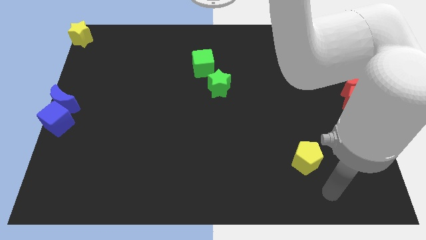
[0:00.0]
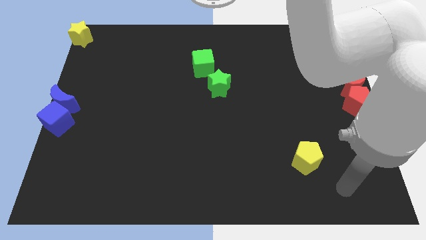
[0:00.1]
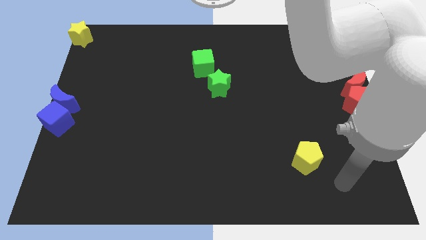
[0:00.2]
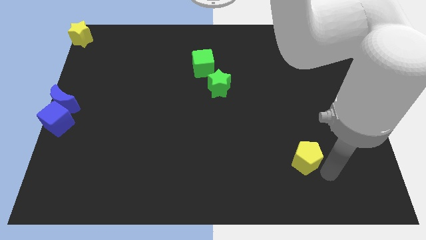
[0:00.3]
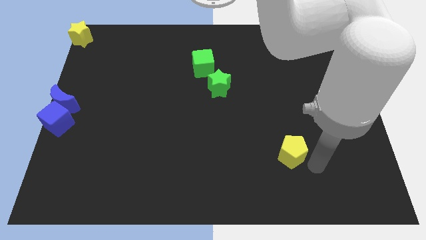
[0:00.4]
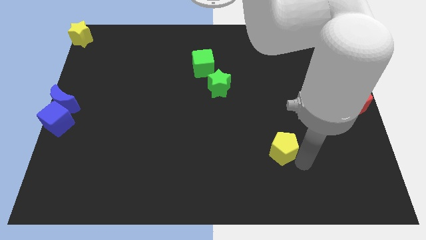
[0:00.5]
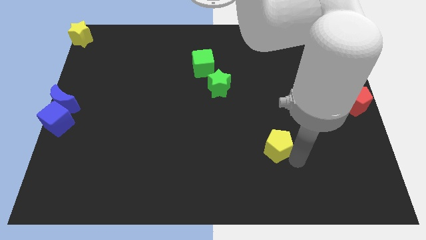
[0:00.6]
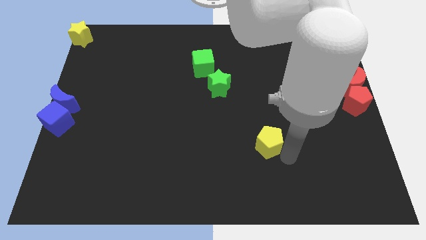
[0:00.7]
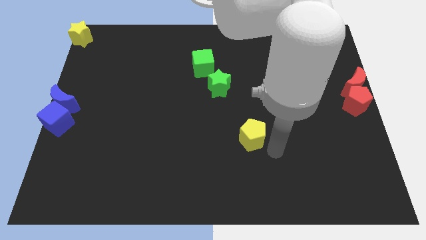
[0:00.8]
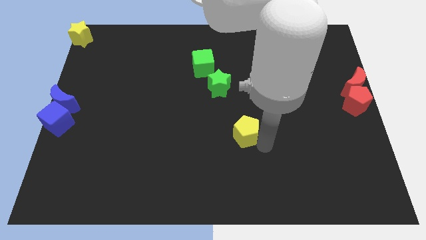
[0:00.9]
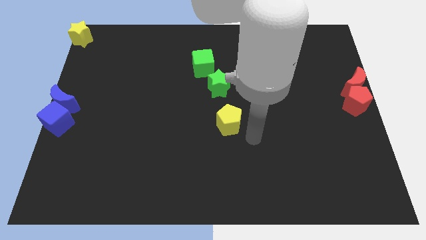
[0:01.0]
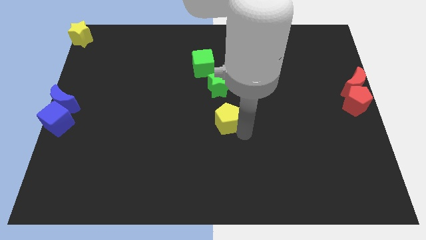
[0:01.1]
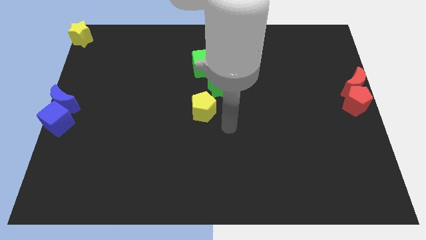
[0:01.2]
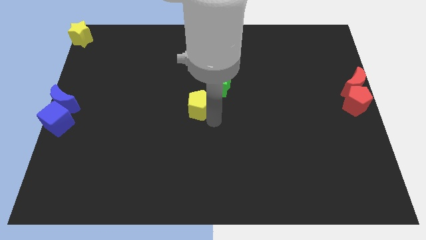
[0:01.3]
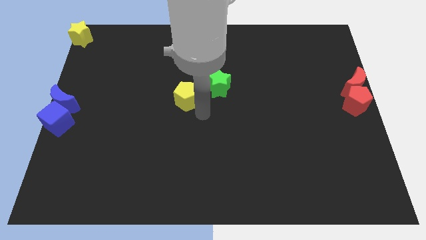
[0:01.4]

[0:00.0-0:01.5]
push the yellow pentagon to the center of the board

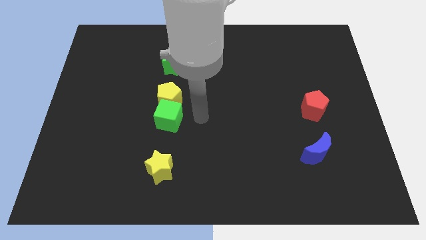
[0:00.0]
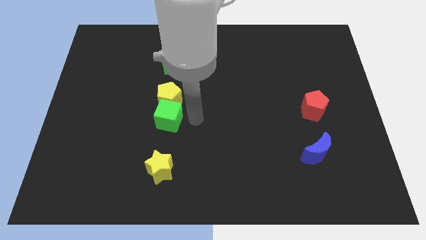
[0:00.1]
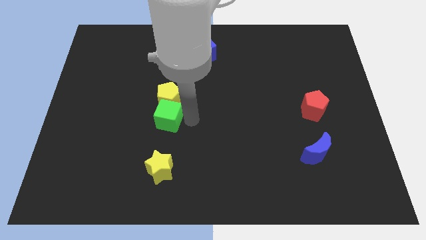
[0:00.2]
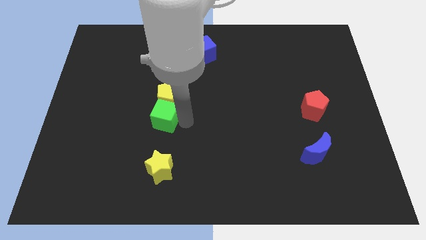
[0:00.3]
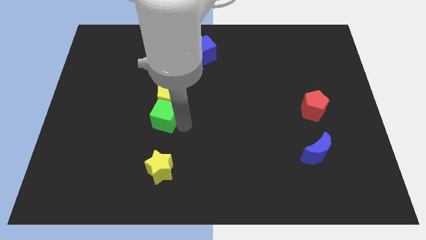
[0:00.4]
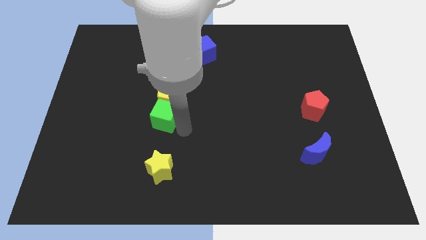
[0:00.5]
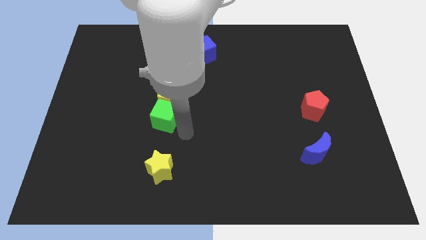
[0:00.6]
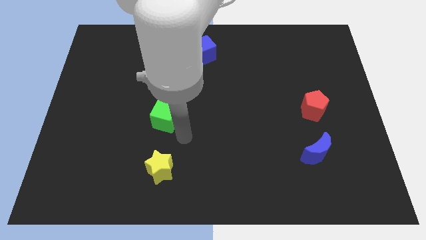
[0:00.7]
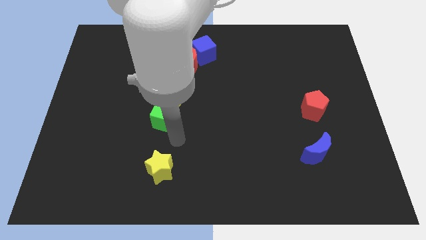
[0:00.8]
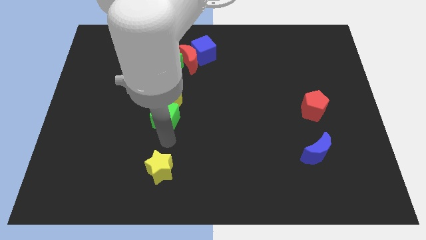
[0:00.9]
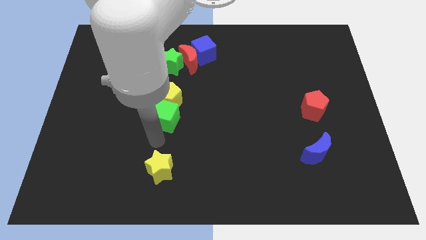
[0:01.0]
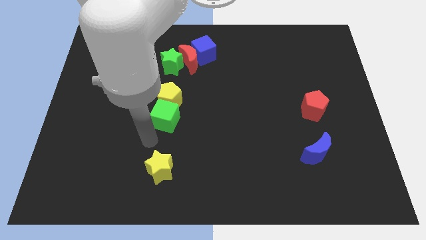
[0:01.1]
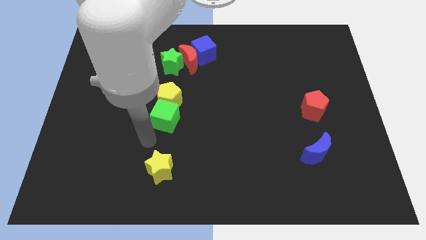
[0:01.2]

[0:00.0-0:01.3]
point your arm at the bottom side of the green cube

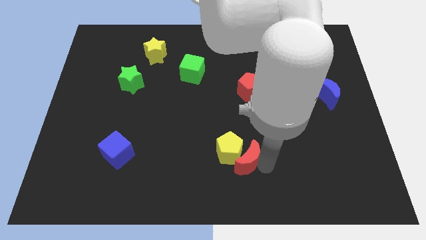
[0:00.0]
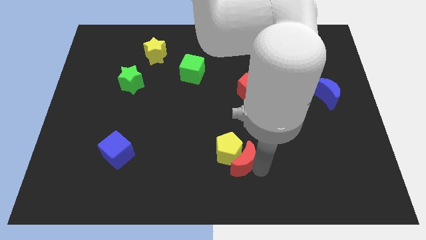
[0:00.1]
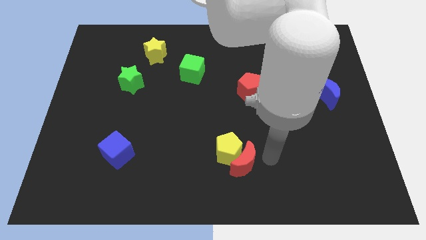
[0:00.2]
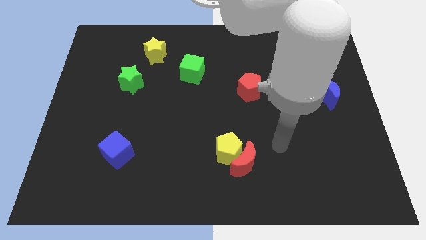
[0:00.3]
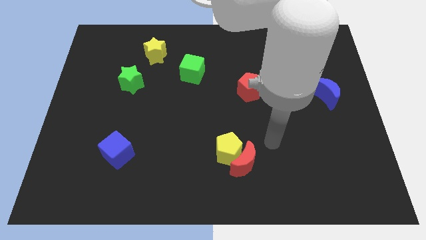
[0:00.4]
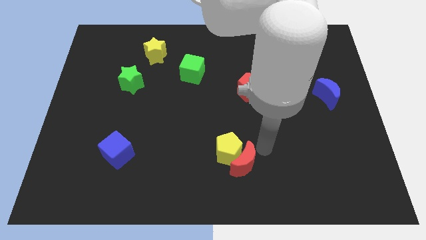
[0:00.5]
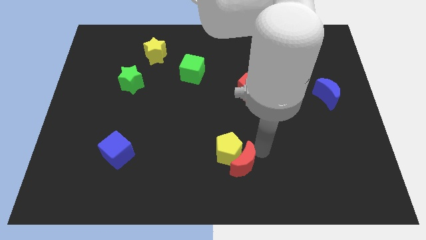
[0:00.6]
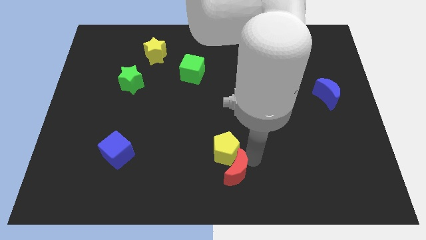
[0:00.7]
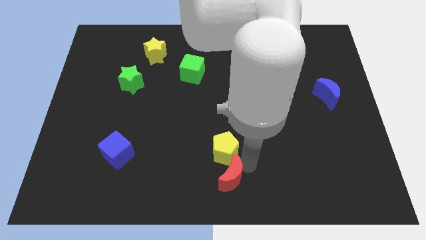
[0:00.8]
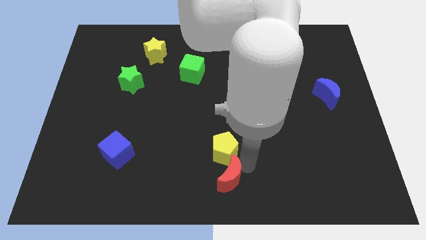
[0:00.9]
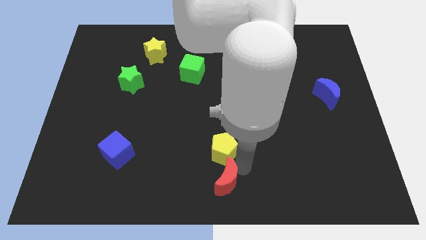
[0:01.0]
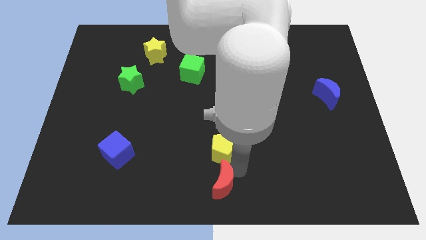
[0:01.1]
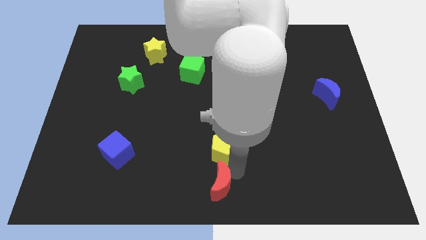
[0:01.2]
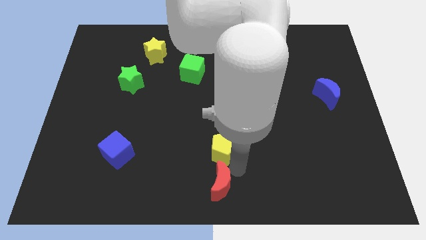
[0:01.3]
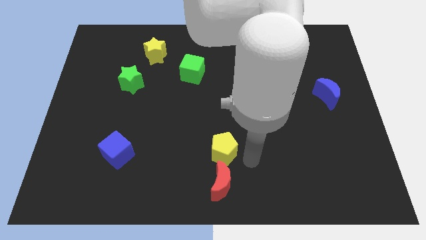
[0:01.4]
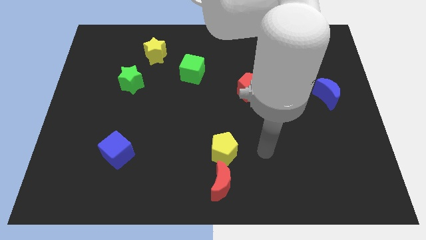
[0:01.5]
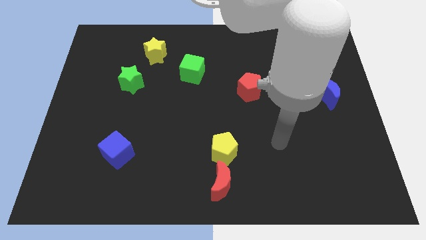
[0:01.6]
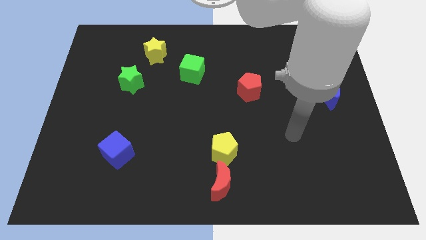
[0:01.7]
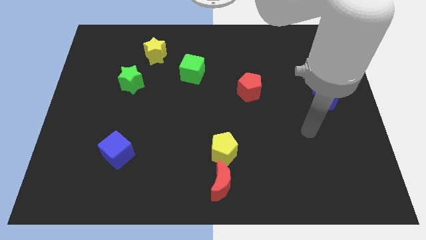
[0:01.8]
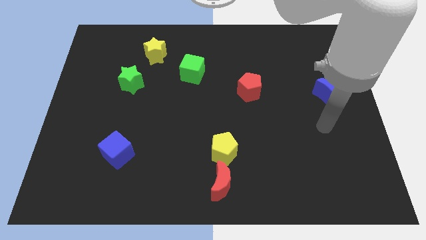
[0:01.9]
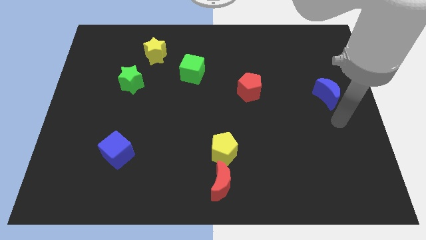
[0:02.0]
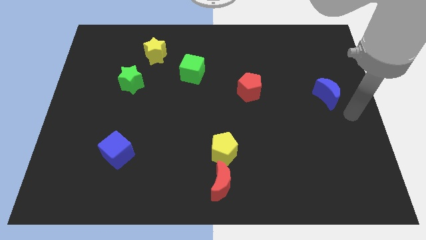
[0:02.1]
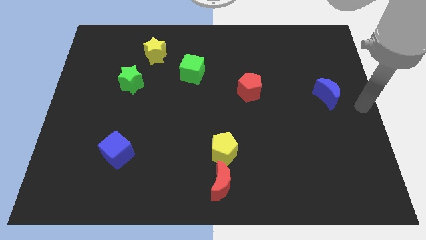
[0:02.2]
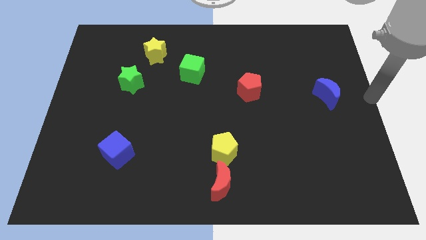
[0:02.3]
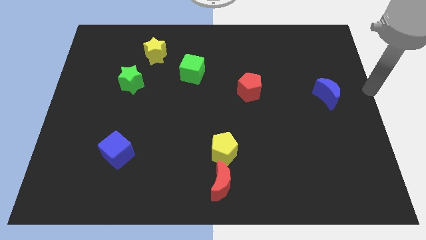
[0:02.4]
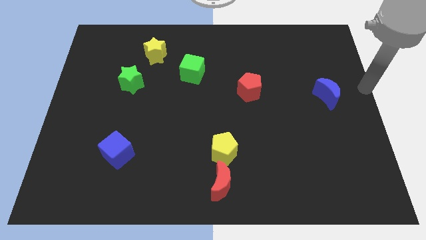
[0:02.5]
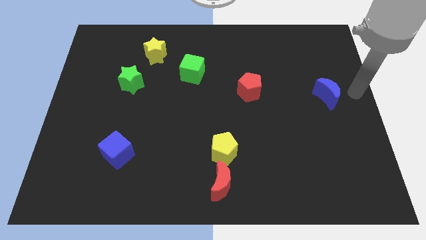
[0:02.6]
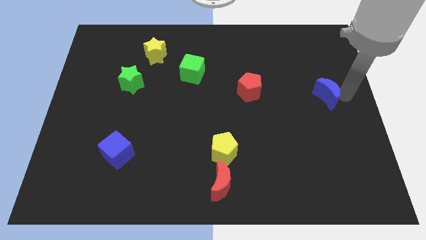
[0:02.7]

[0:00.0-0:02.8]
move your arm away from red crescent

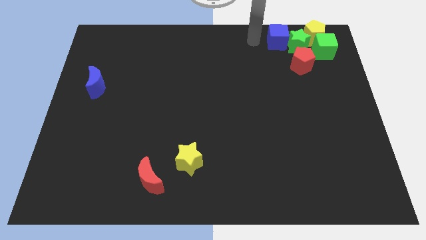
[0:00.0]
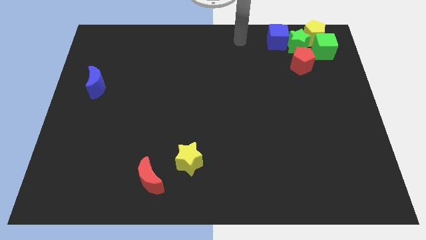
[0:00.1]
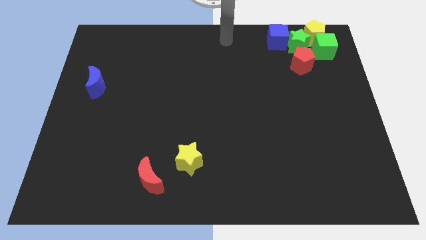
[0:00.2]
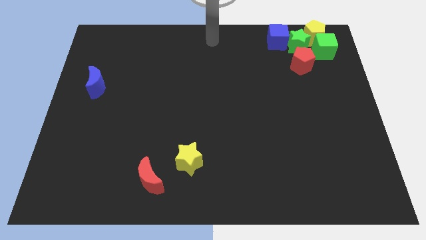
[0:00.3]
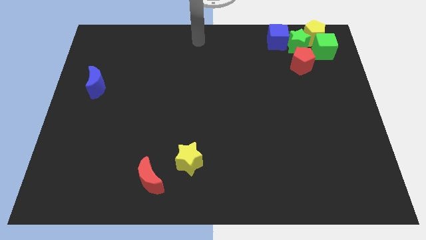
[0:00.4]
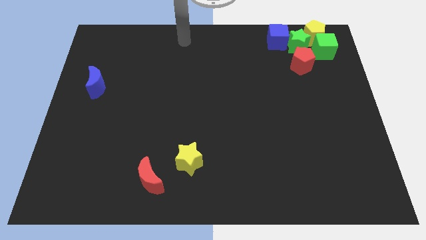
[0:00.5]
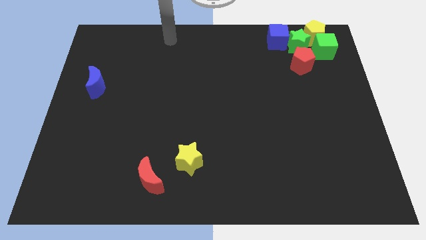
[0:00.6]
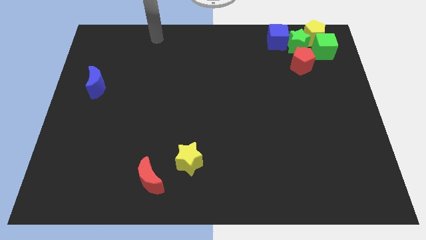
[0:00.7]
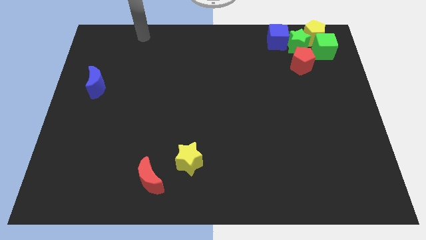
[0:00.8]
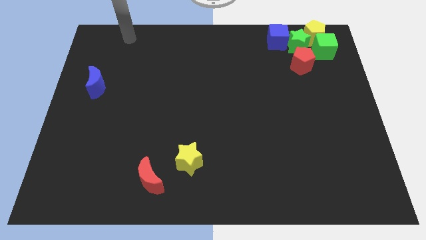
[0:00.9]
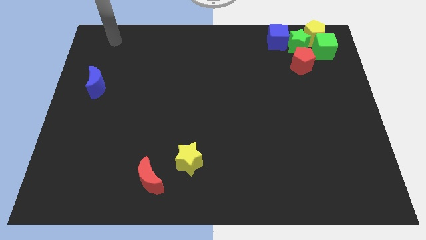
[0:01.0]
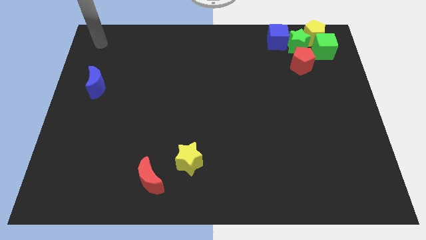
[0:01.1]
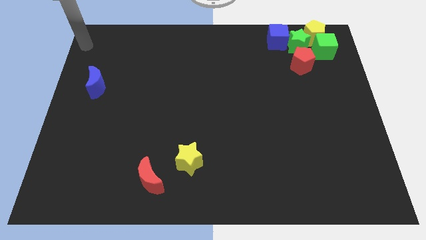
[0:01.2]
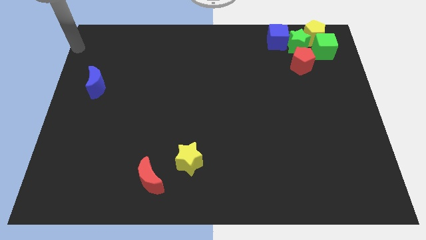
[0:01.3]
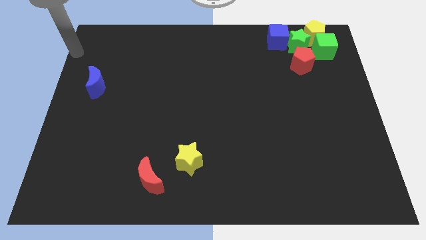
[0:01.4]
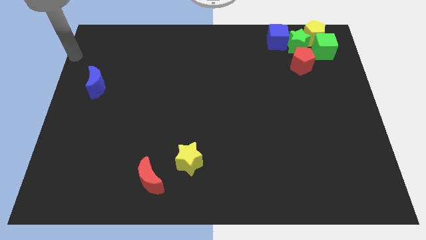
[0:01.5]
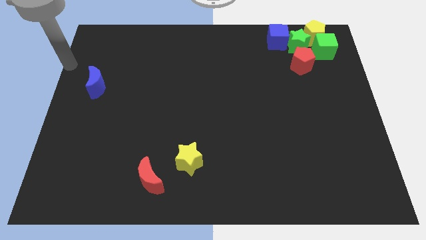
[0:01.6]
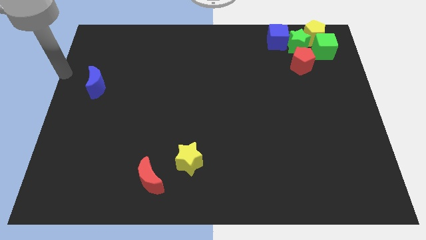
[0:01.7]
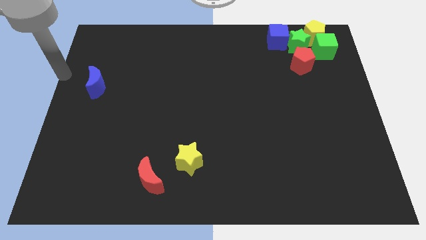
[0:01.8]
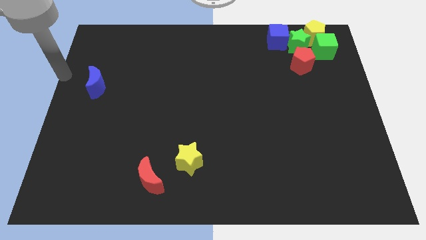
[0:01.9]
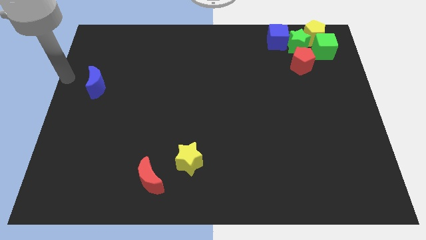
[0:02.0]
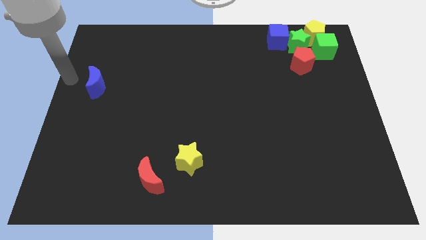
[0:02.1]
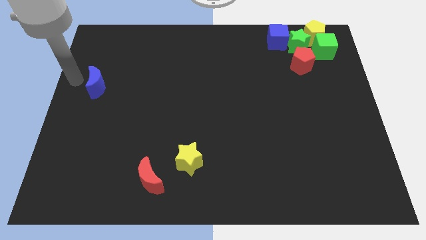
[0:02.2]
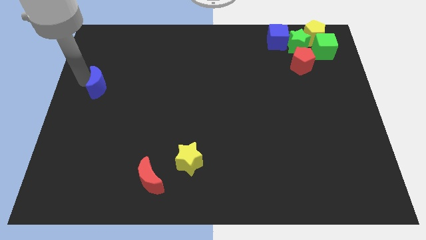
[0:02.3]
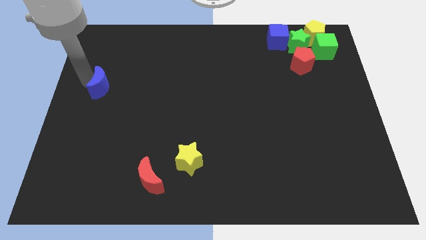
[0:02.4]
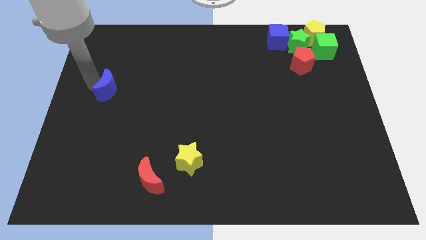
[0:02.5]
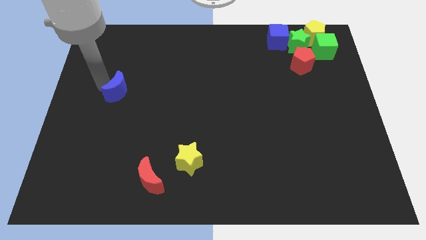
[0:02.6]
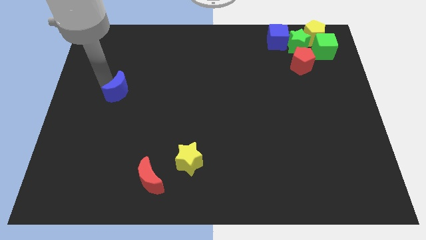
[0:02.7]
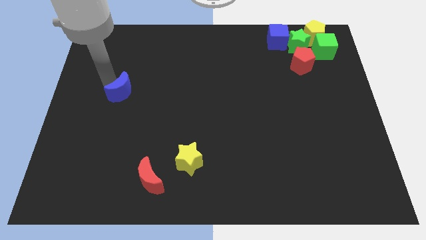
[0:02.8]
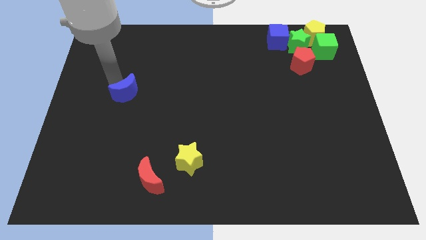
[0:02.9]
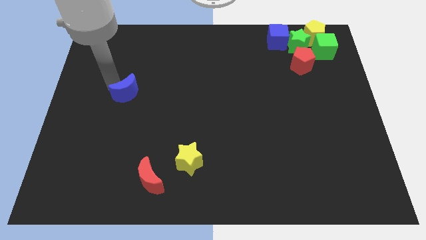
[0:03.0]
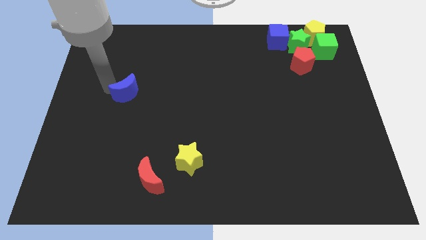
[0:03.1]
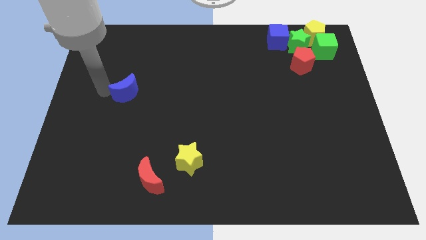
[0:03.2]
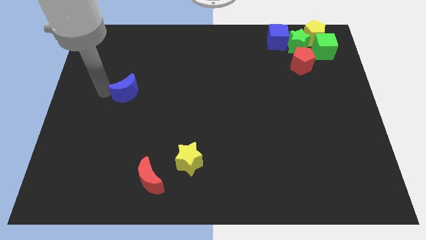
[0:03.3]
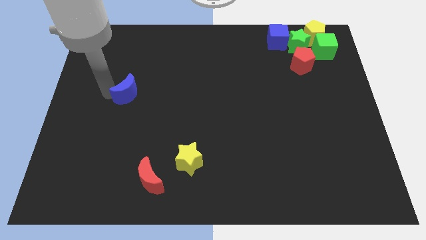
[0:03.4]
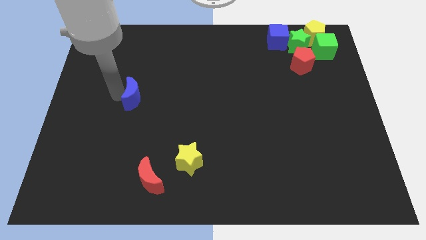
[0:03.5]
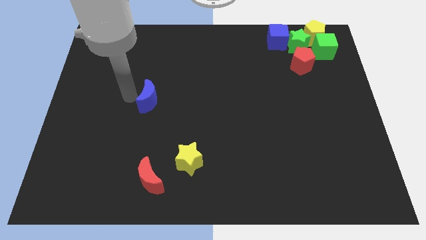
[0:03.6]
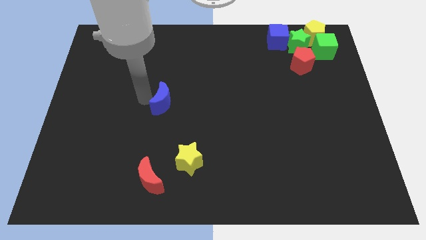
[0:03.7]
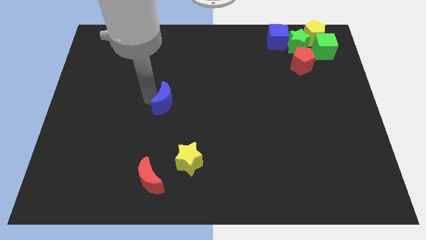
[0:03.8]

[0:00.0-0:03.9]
move the blue crescent vertically to the top side of the red crescent
